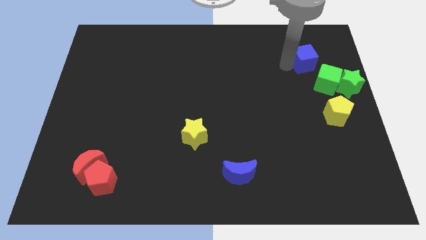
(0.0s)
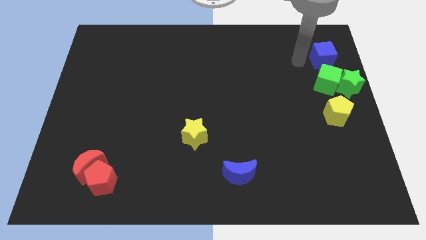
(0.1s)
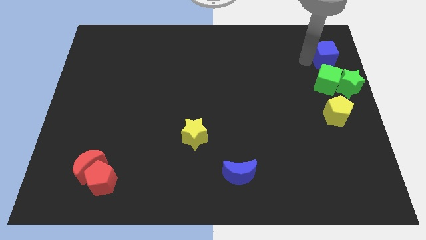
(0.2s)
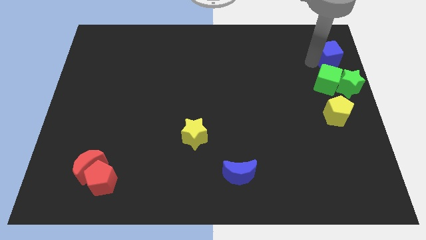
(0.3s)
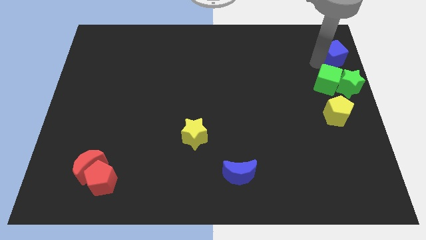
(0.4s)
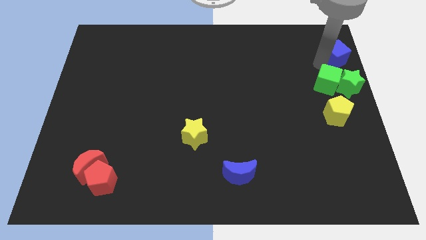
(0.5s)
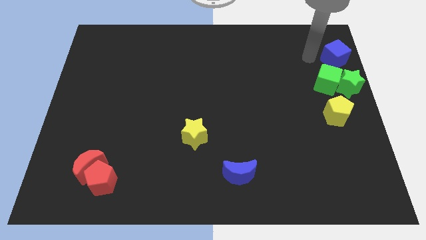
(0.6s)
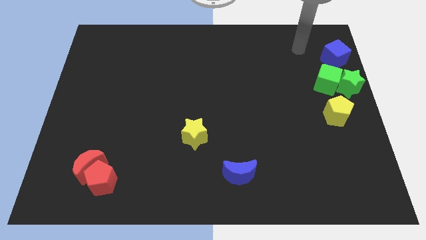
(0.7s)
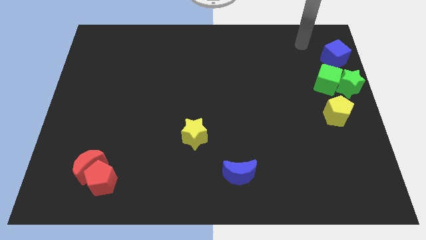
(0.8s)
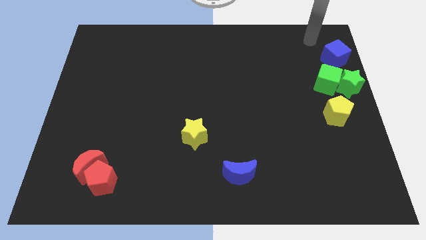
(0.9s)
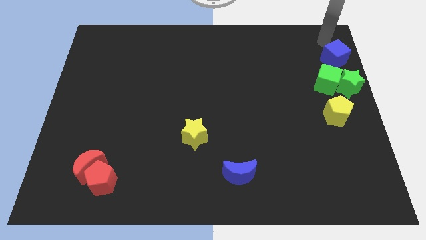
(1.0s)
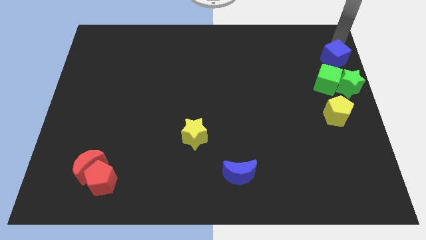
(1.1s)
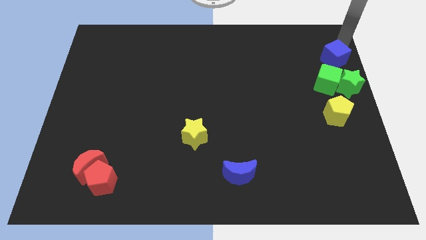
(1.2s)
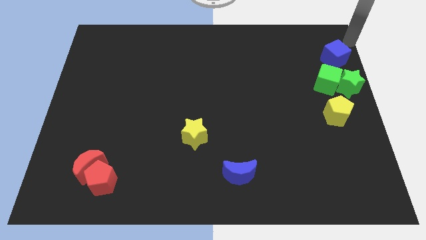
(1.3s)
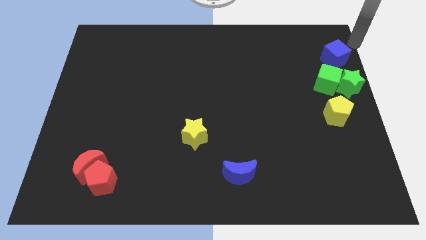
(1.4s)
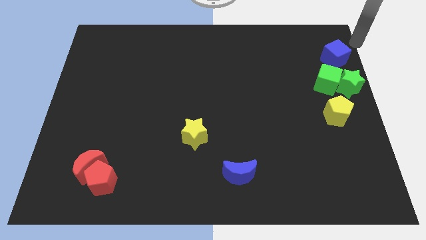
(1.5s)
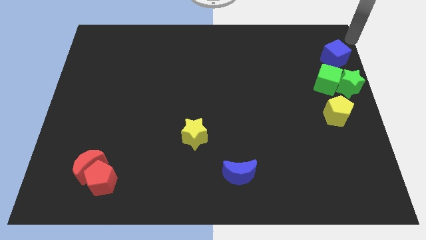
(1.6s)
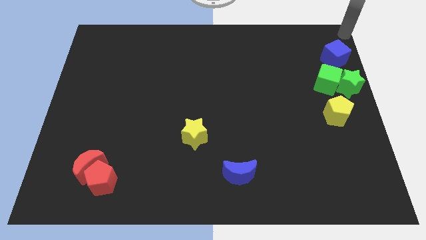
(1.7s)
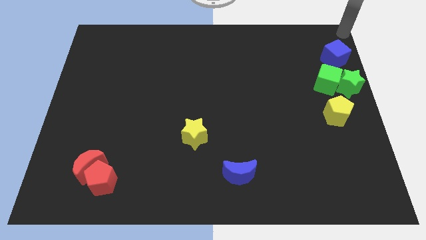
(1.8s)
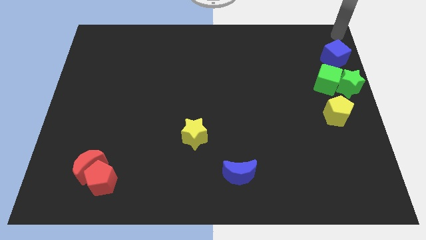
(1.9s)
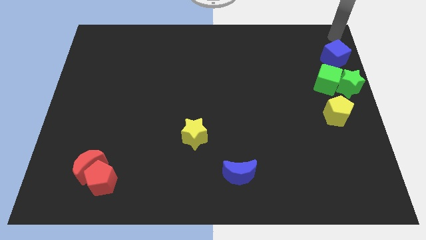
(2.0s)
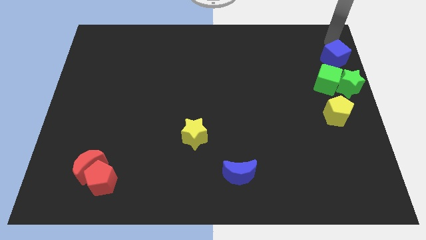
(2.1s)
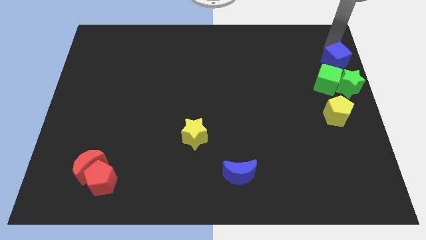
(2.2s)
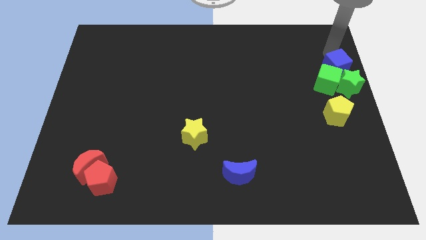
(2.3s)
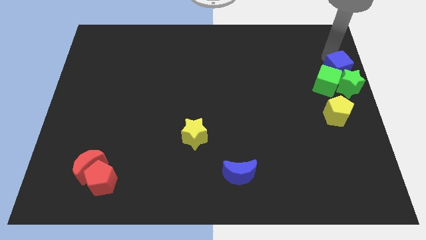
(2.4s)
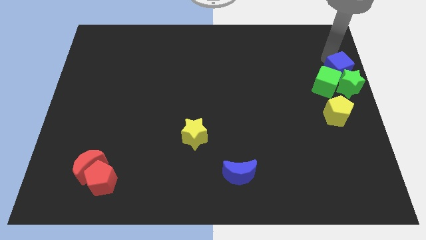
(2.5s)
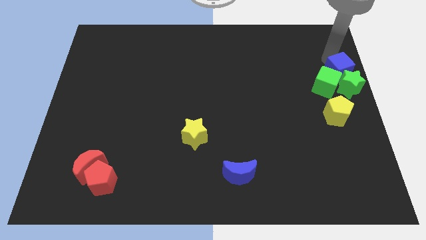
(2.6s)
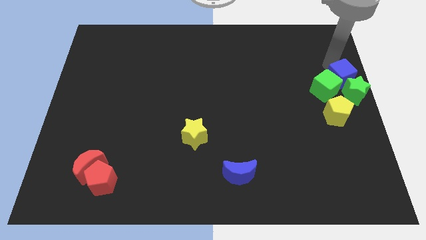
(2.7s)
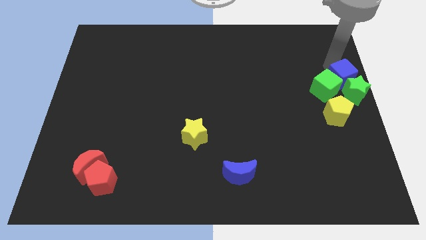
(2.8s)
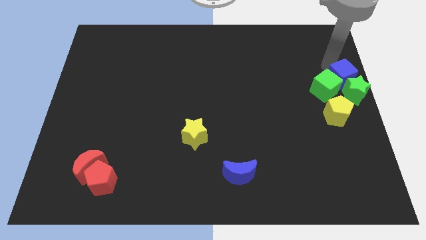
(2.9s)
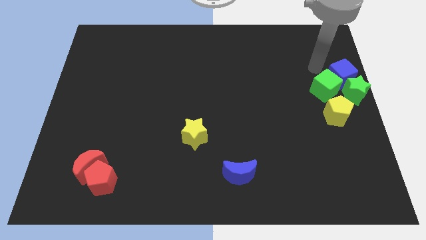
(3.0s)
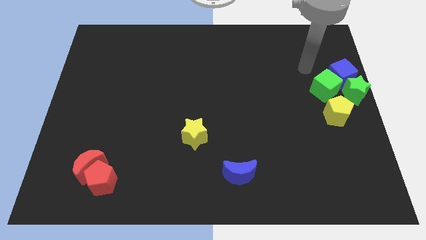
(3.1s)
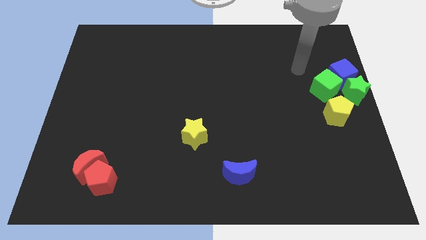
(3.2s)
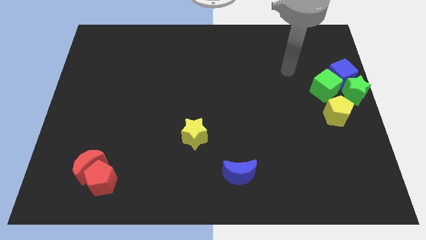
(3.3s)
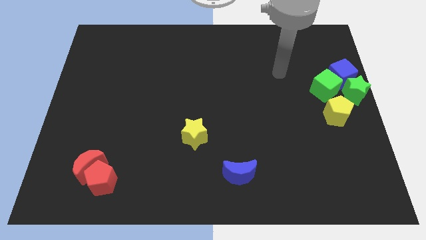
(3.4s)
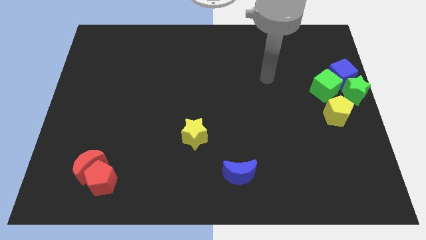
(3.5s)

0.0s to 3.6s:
place the blue cube beside the green cube

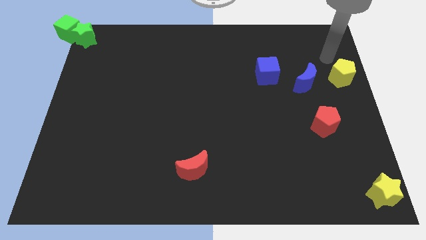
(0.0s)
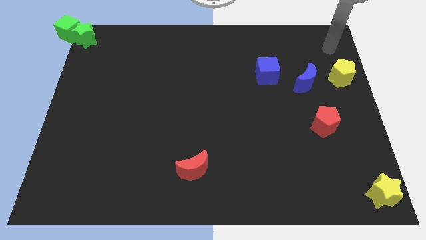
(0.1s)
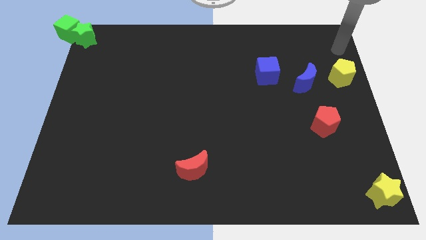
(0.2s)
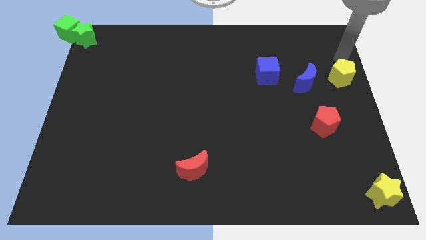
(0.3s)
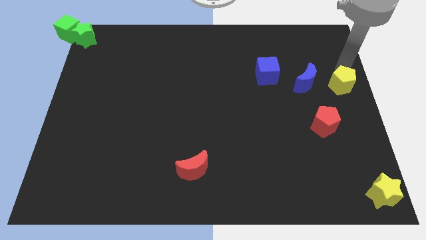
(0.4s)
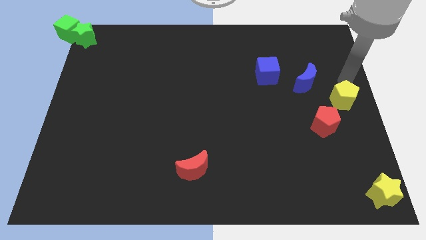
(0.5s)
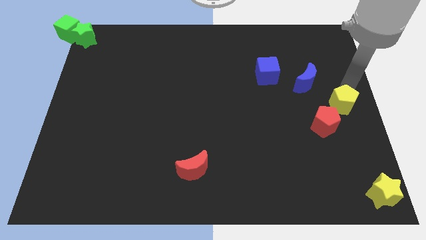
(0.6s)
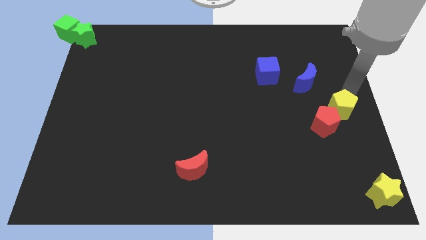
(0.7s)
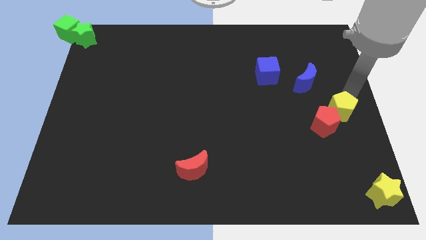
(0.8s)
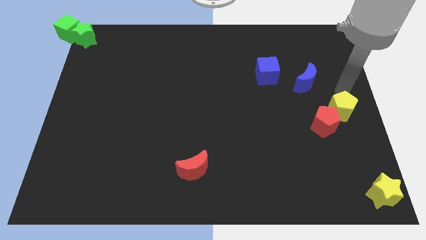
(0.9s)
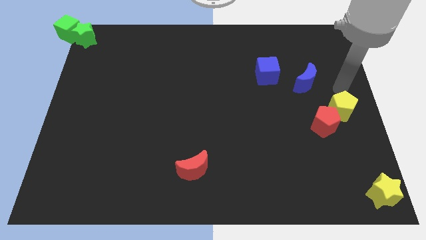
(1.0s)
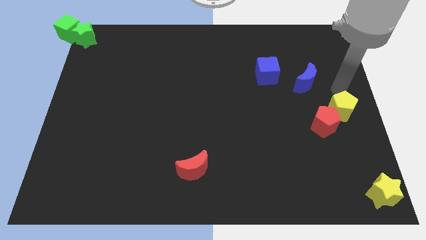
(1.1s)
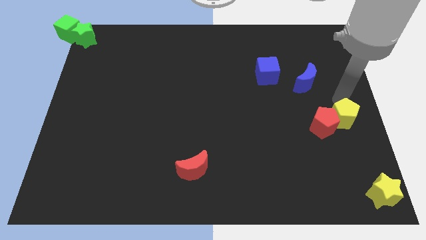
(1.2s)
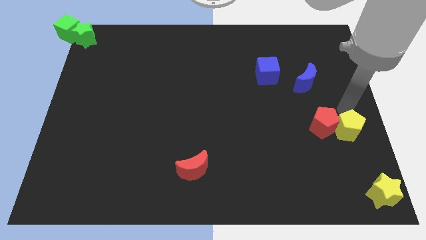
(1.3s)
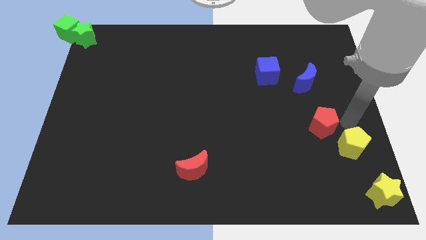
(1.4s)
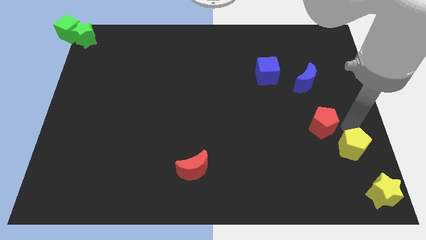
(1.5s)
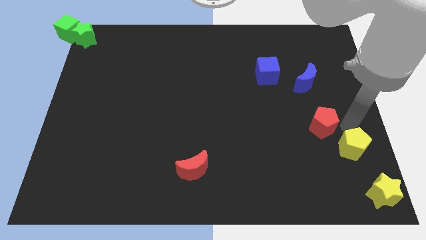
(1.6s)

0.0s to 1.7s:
slide the yellow pentagon diagonally bottom right to the red pentagon

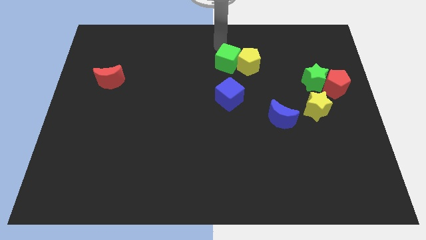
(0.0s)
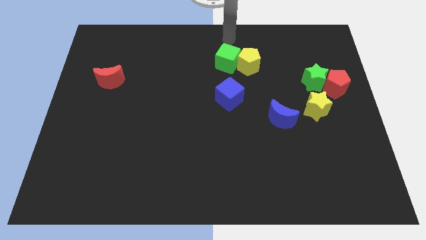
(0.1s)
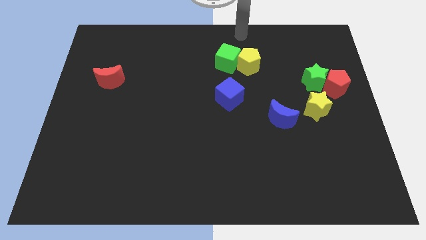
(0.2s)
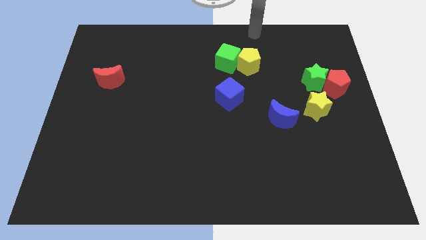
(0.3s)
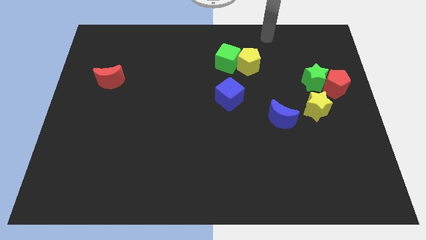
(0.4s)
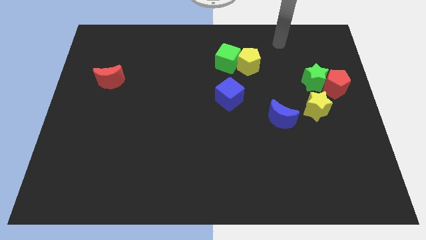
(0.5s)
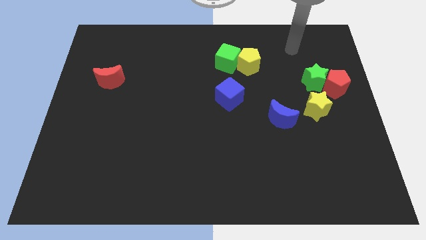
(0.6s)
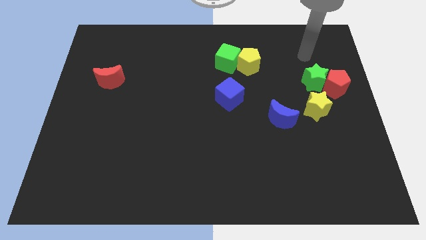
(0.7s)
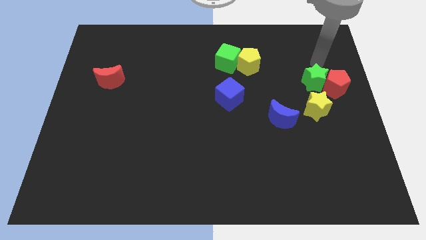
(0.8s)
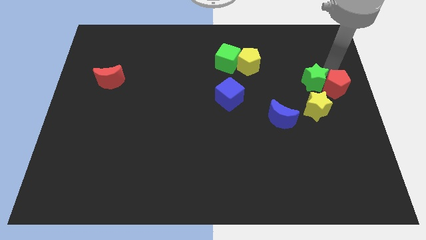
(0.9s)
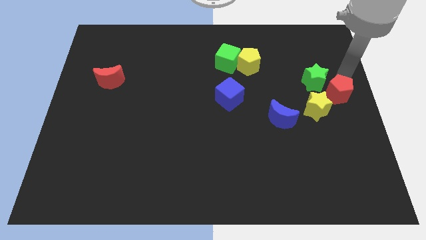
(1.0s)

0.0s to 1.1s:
slightly move the red pentagon to the bottom of the board

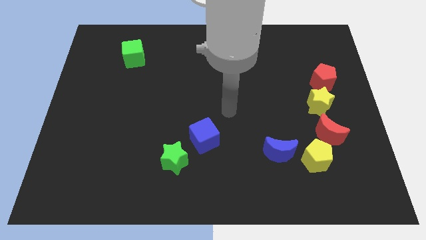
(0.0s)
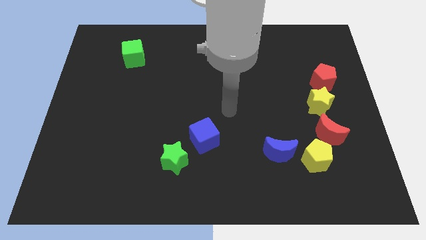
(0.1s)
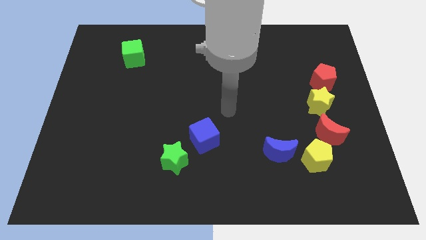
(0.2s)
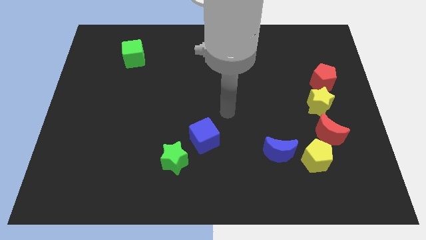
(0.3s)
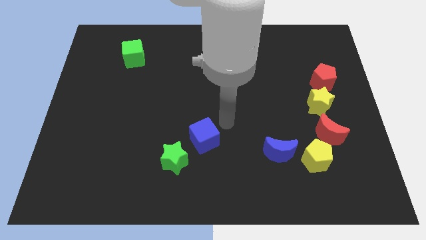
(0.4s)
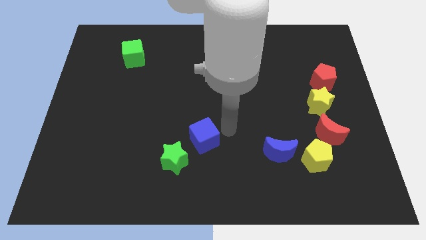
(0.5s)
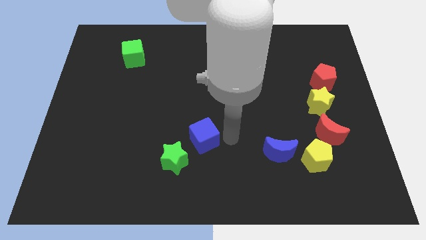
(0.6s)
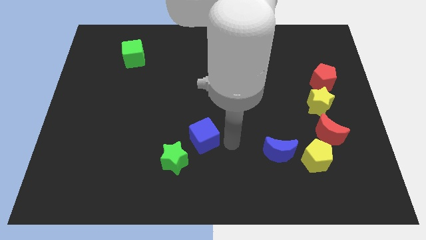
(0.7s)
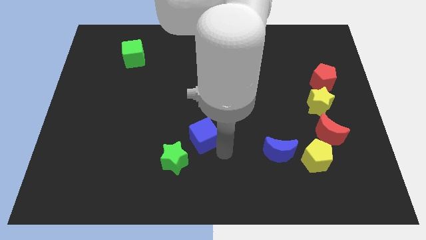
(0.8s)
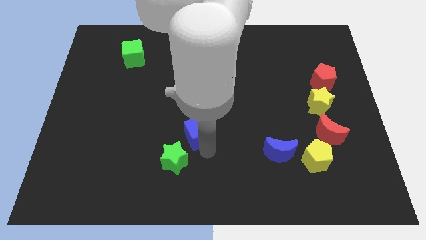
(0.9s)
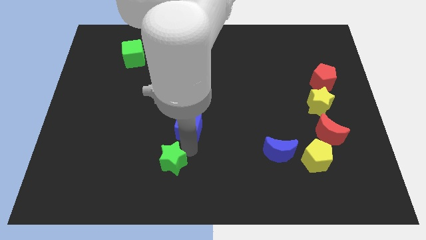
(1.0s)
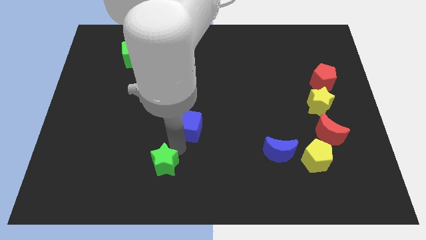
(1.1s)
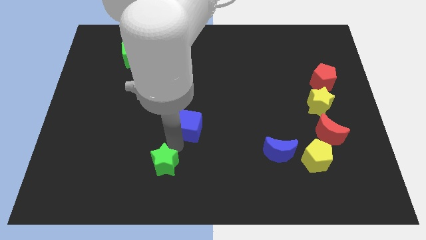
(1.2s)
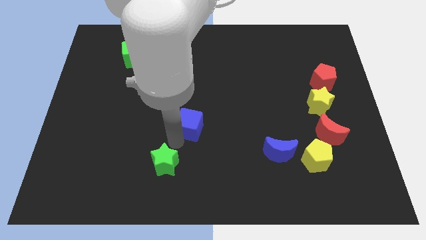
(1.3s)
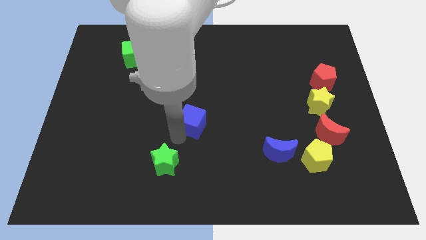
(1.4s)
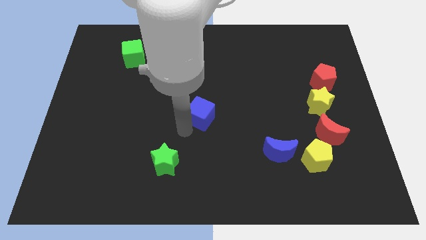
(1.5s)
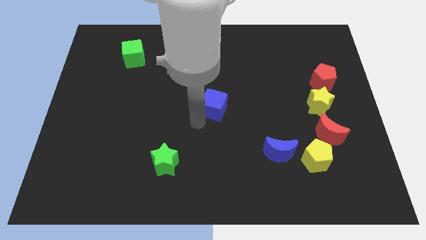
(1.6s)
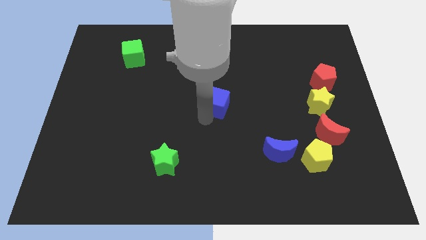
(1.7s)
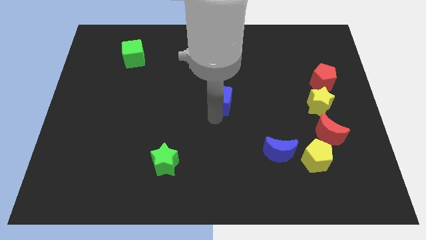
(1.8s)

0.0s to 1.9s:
move the blue cube to the left of the yellow star

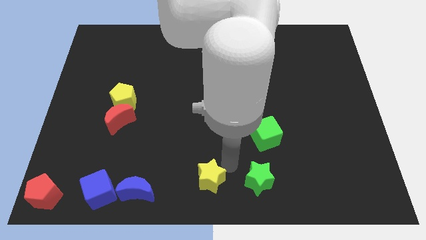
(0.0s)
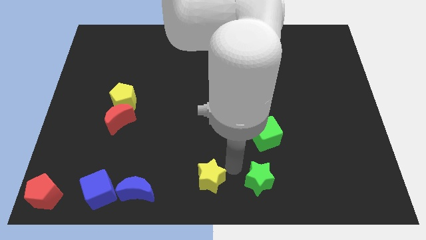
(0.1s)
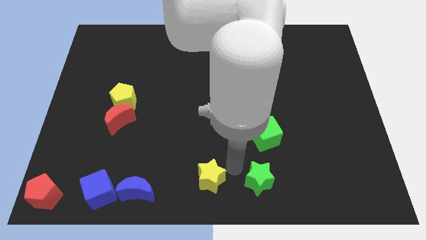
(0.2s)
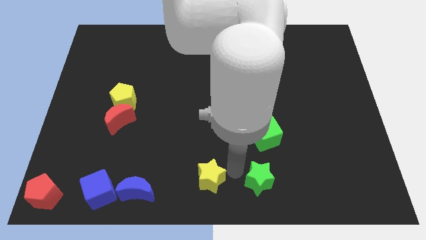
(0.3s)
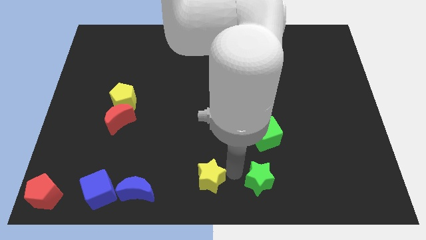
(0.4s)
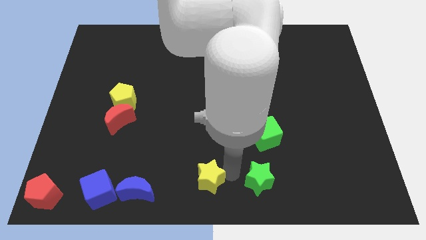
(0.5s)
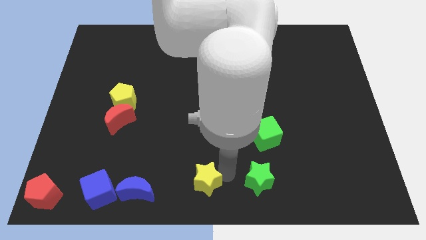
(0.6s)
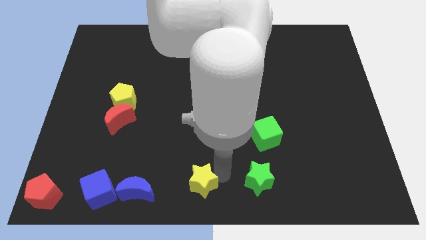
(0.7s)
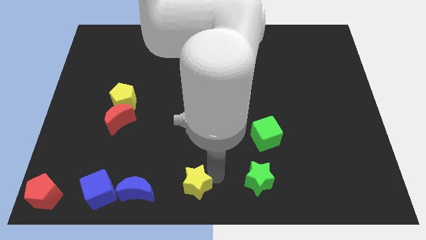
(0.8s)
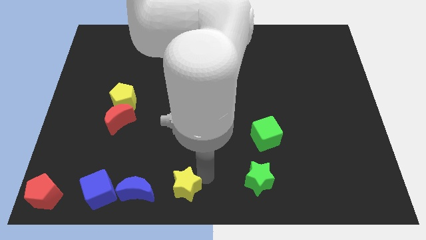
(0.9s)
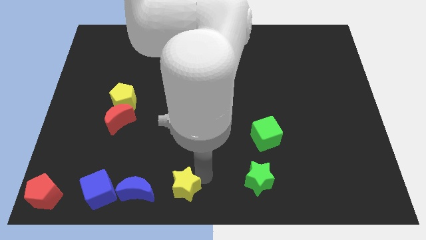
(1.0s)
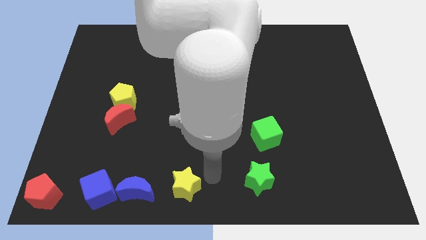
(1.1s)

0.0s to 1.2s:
move the yellow star into the right side of the blue moon
